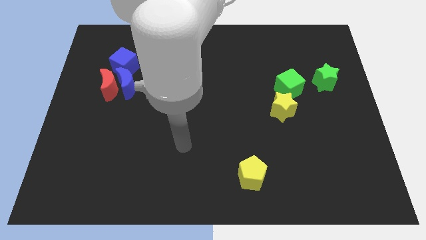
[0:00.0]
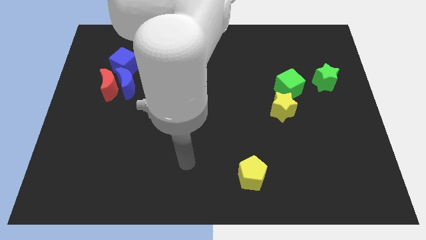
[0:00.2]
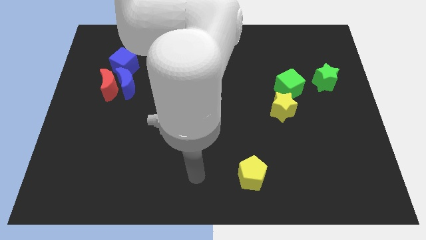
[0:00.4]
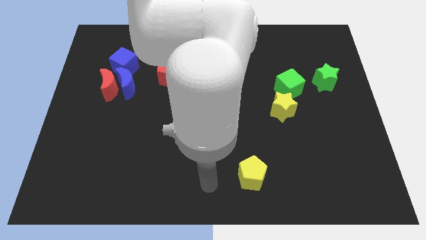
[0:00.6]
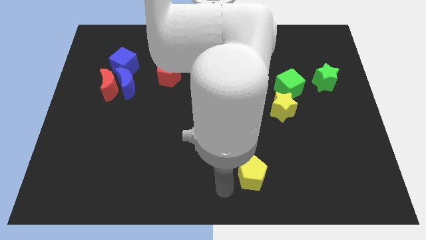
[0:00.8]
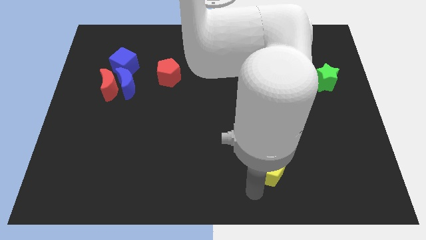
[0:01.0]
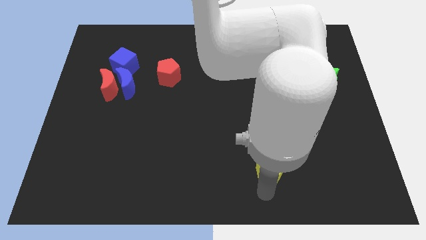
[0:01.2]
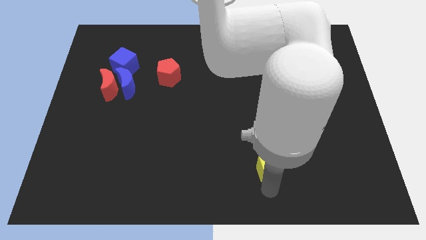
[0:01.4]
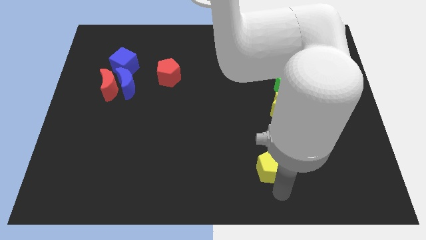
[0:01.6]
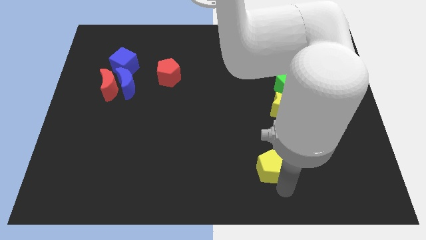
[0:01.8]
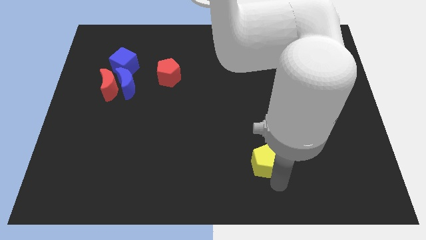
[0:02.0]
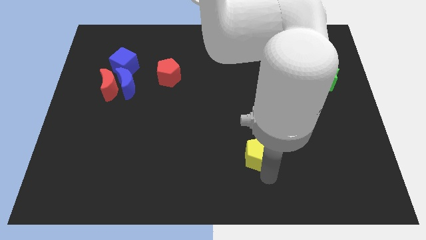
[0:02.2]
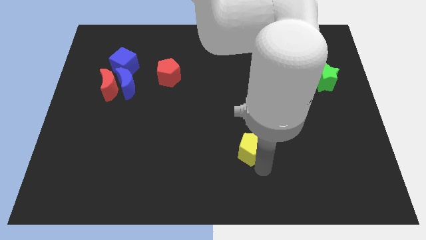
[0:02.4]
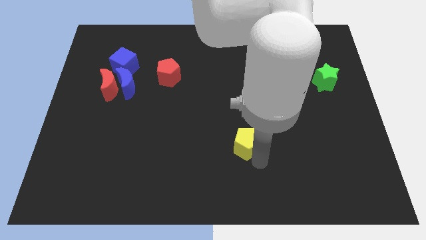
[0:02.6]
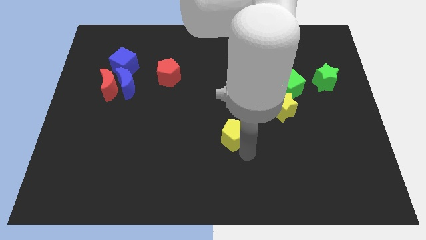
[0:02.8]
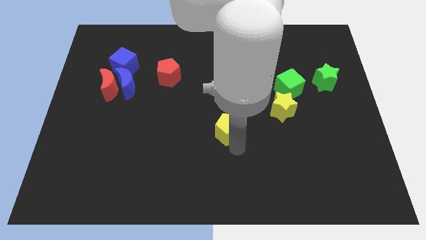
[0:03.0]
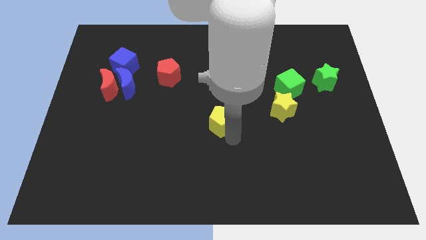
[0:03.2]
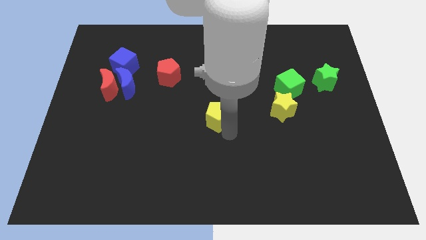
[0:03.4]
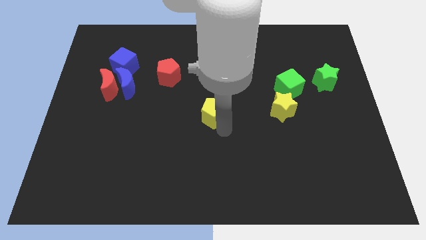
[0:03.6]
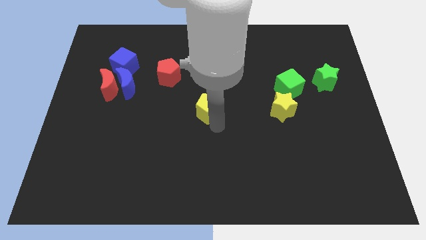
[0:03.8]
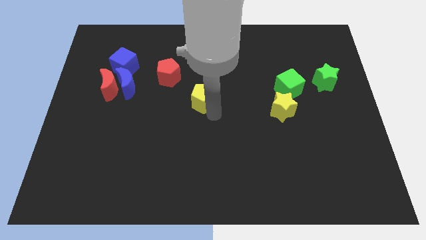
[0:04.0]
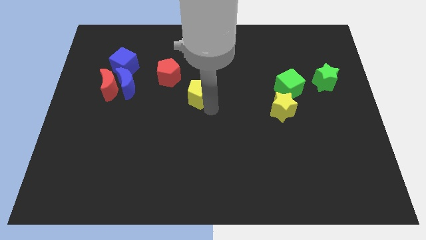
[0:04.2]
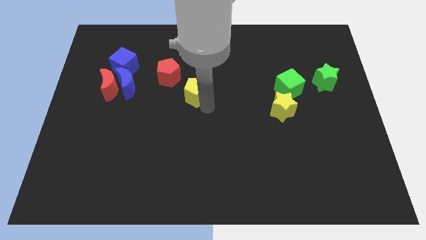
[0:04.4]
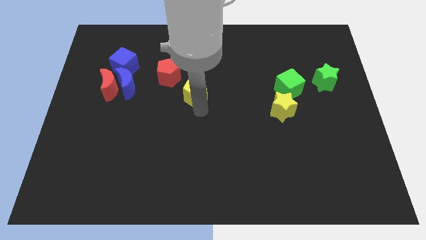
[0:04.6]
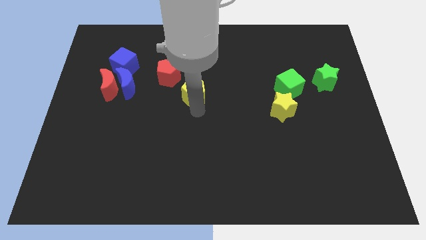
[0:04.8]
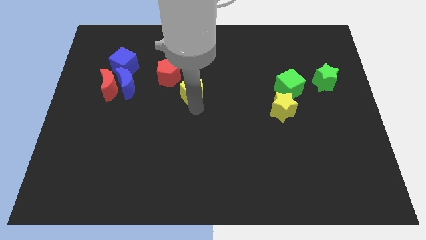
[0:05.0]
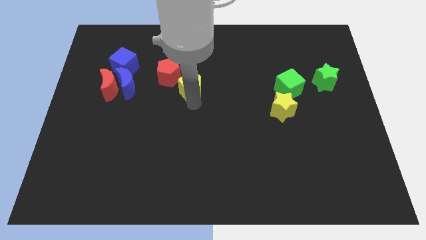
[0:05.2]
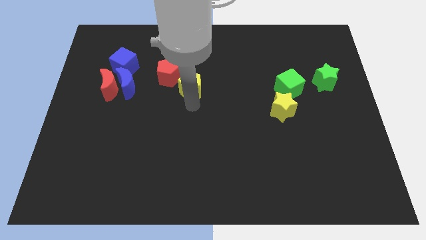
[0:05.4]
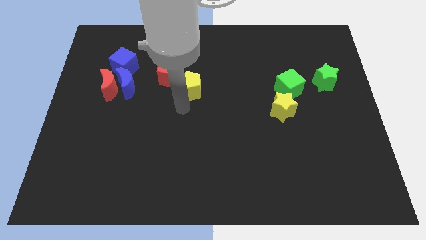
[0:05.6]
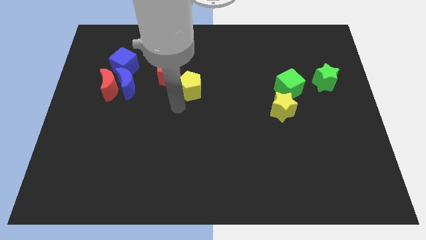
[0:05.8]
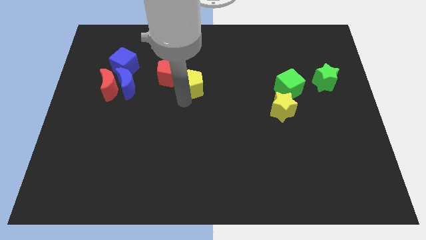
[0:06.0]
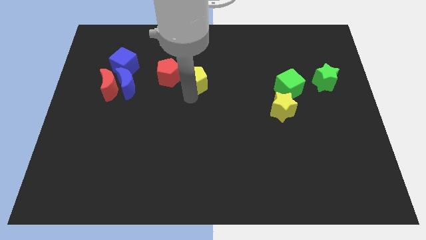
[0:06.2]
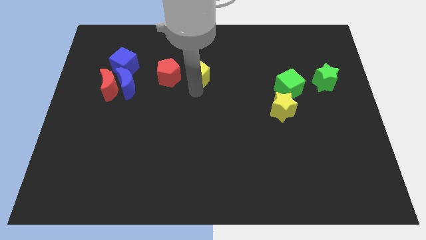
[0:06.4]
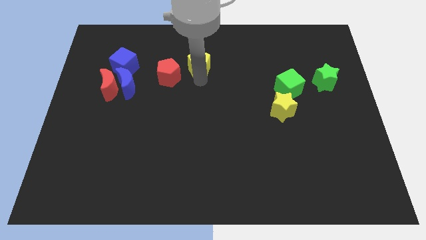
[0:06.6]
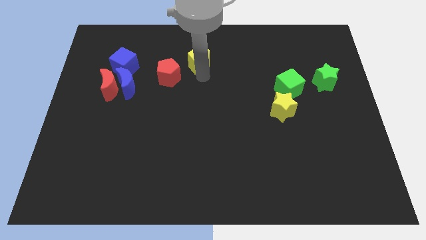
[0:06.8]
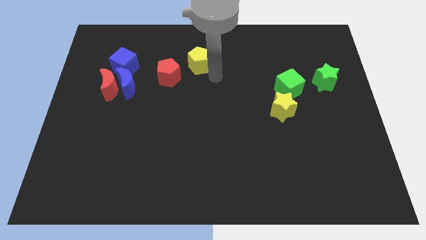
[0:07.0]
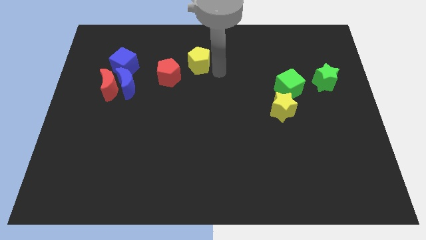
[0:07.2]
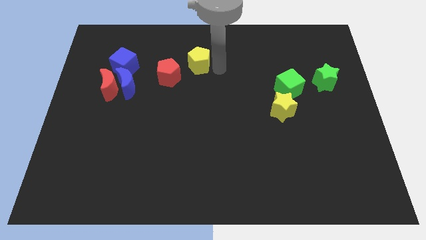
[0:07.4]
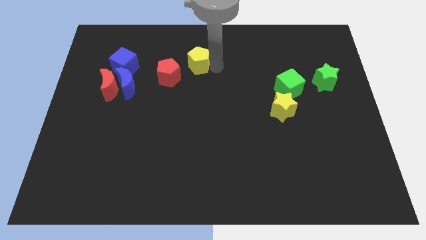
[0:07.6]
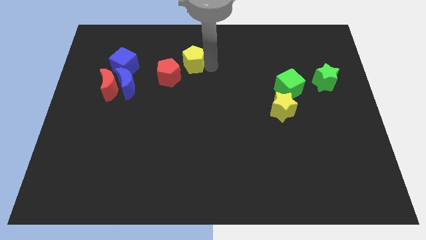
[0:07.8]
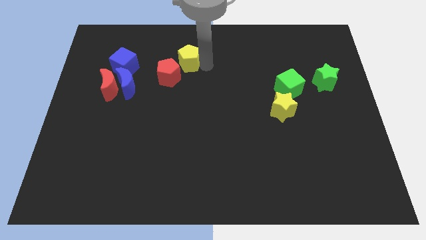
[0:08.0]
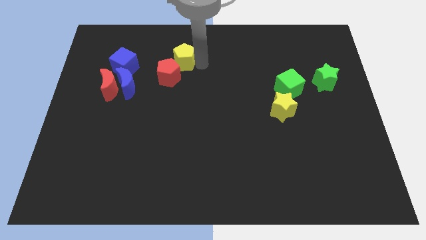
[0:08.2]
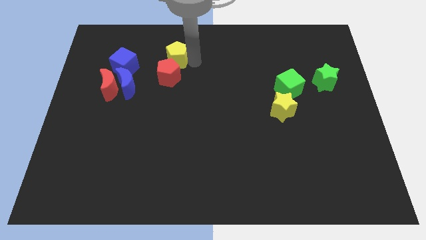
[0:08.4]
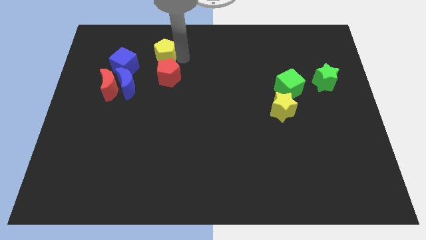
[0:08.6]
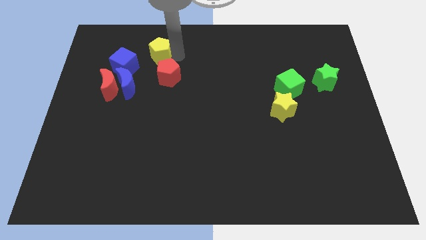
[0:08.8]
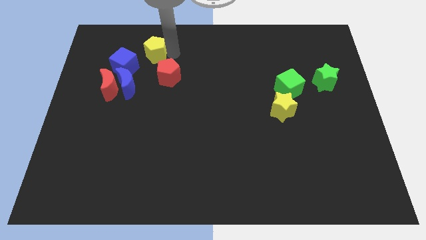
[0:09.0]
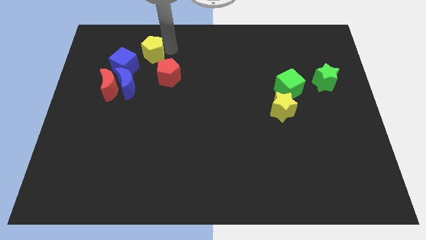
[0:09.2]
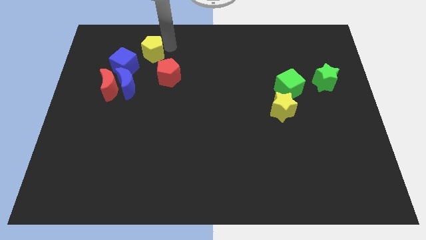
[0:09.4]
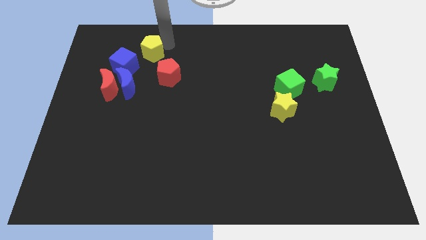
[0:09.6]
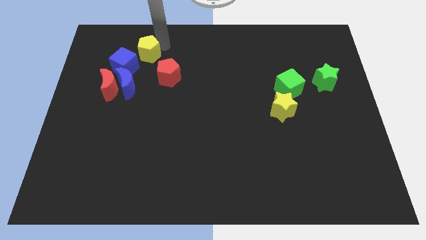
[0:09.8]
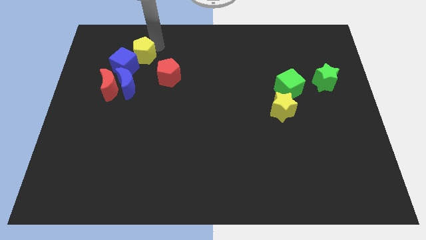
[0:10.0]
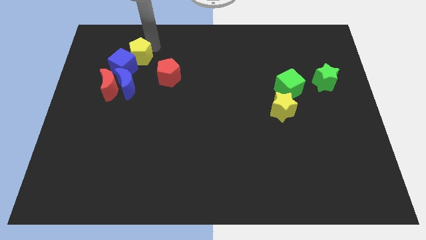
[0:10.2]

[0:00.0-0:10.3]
slide the yellow pentagon close to the blue cube

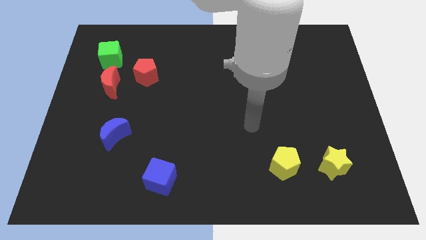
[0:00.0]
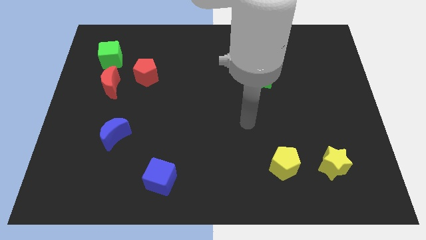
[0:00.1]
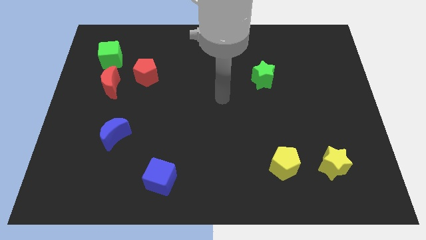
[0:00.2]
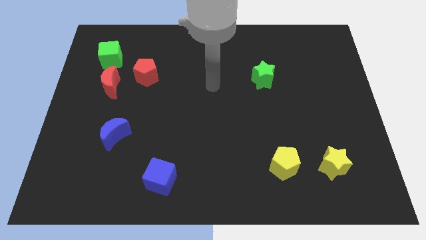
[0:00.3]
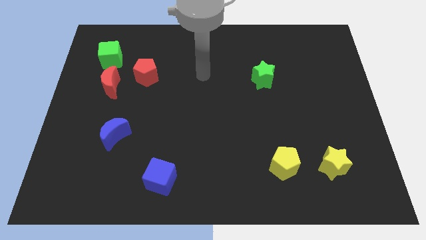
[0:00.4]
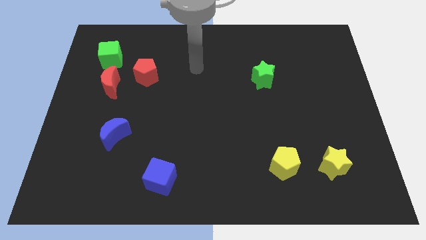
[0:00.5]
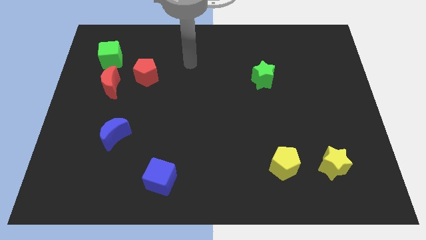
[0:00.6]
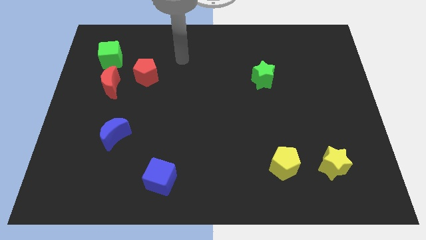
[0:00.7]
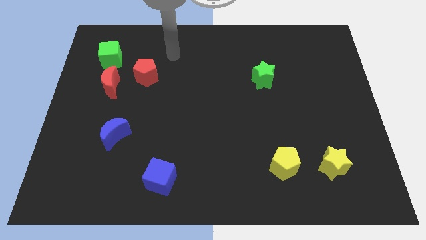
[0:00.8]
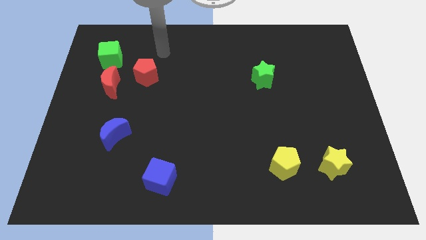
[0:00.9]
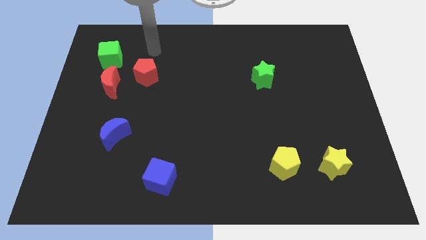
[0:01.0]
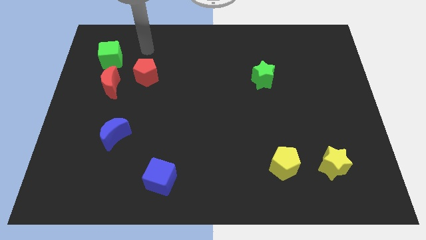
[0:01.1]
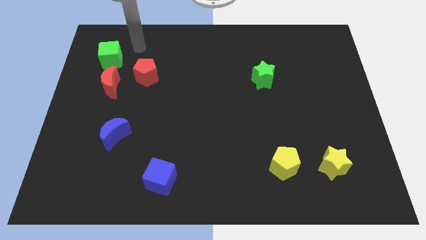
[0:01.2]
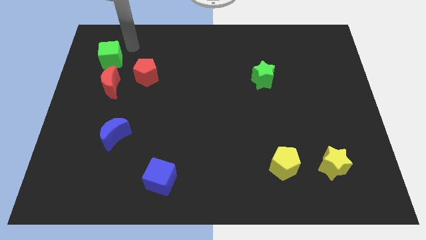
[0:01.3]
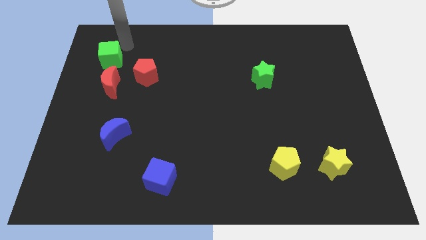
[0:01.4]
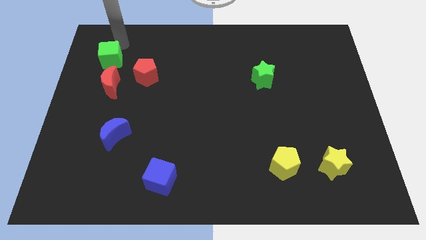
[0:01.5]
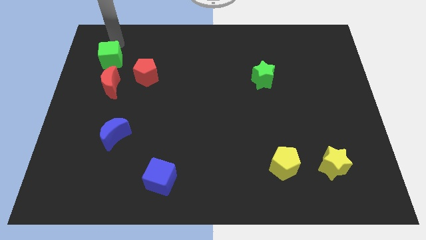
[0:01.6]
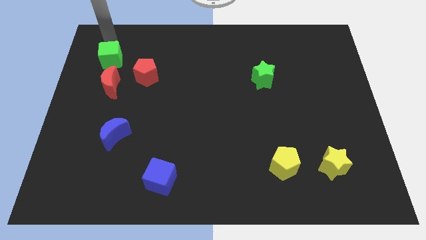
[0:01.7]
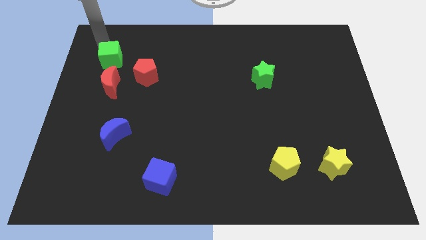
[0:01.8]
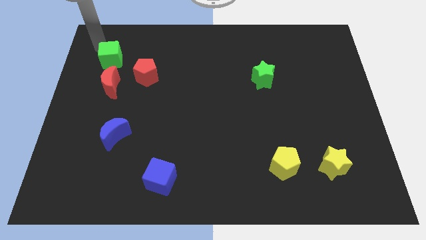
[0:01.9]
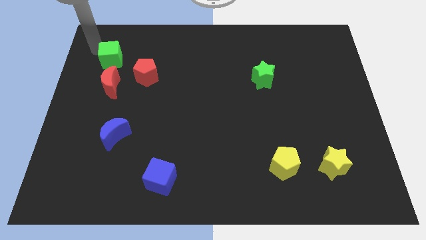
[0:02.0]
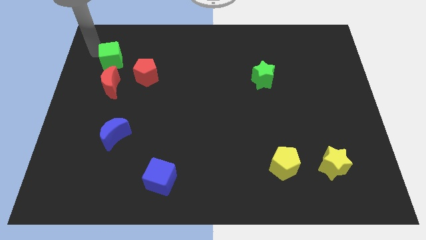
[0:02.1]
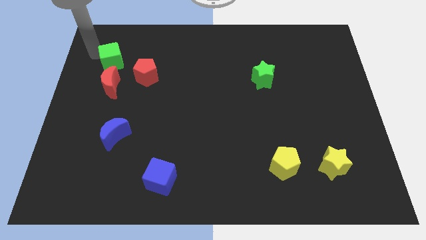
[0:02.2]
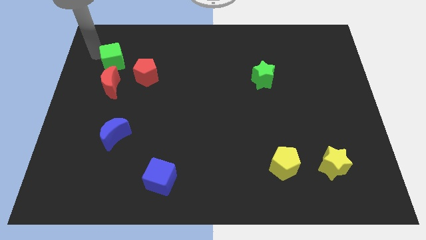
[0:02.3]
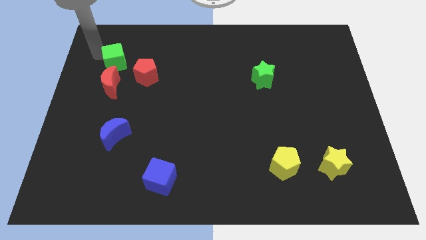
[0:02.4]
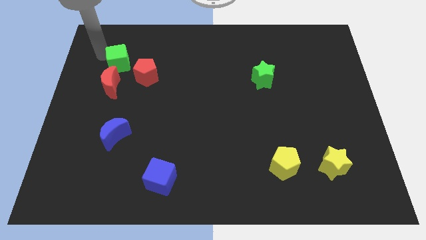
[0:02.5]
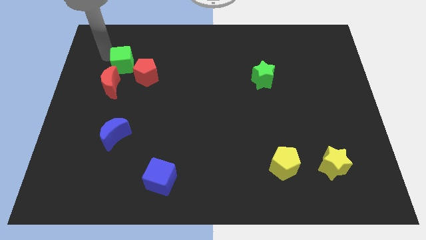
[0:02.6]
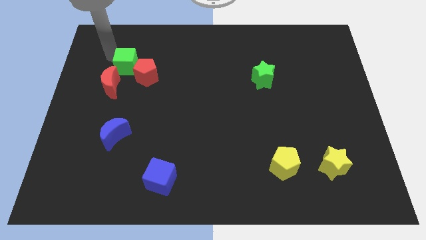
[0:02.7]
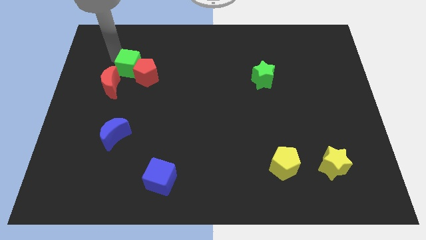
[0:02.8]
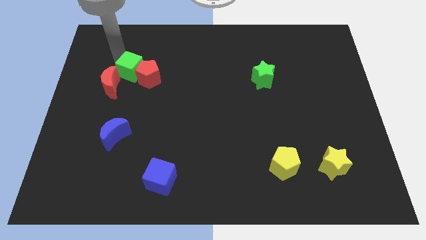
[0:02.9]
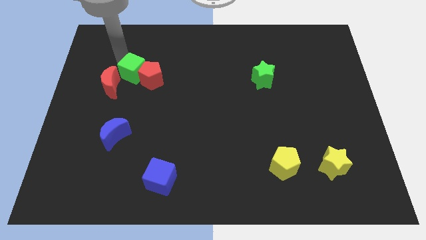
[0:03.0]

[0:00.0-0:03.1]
slide the green cube next to the red pentagon
